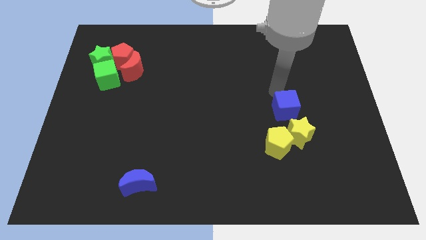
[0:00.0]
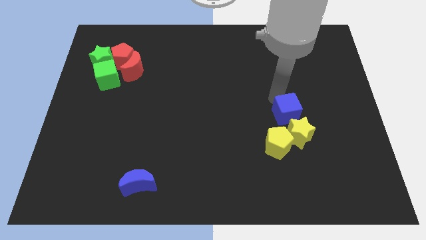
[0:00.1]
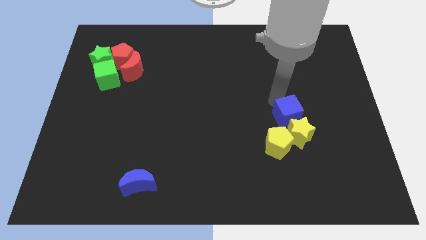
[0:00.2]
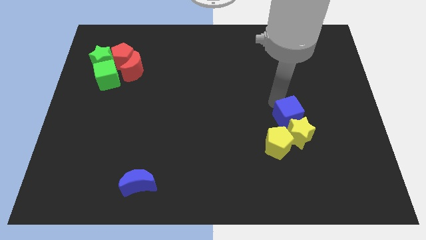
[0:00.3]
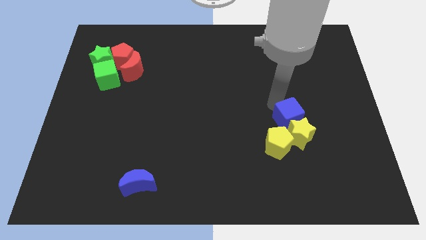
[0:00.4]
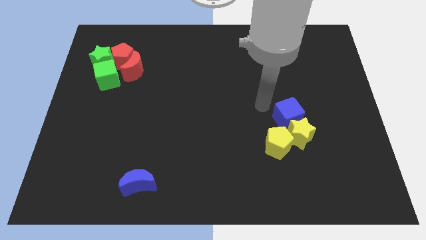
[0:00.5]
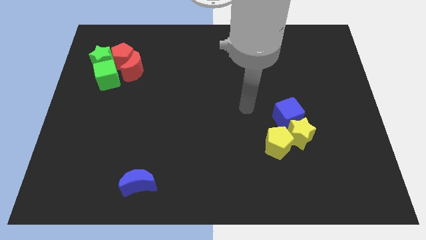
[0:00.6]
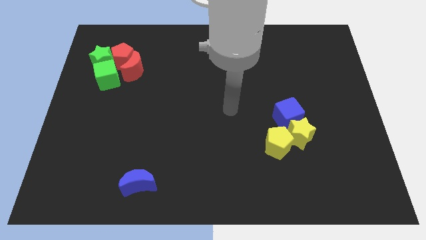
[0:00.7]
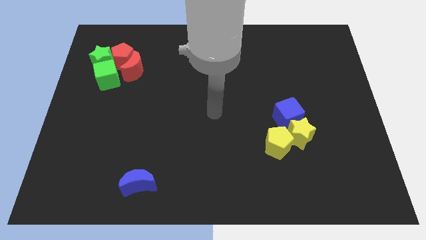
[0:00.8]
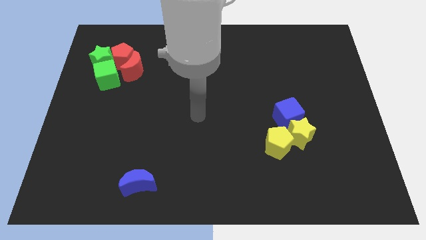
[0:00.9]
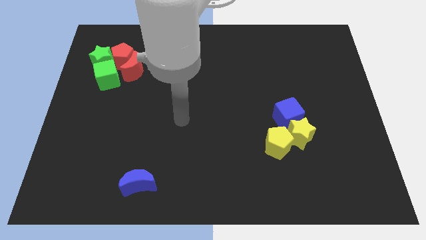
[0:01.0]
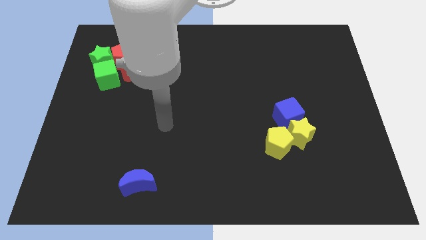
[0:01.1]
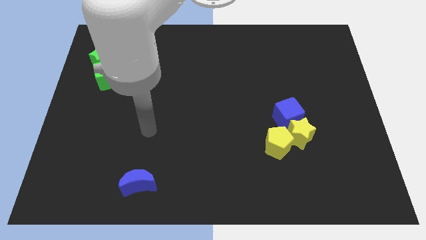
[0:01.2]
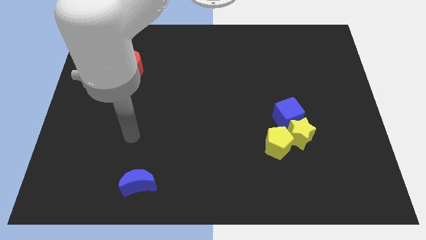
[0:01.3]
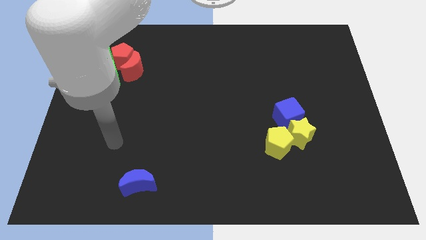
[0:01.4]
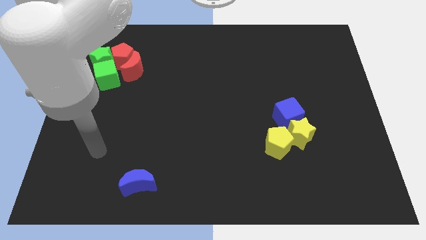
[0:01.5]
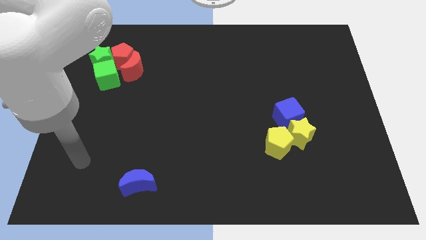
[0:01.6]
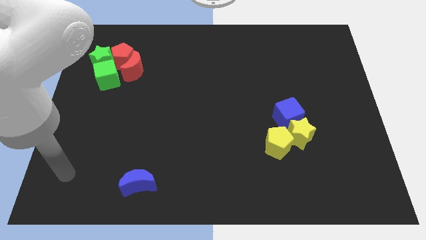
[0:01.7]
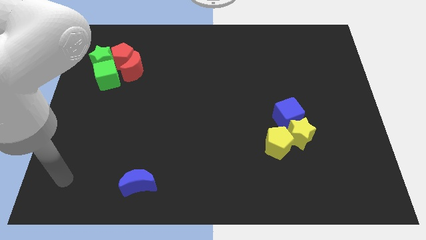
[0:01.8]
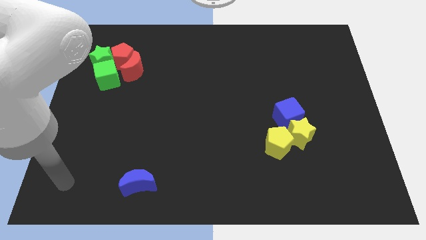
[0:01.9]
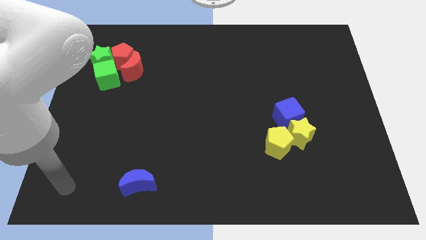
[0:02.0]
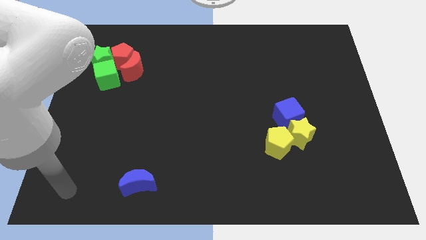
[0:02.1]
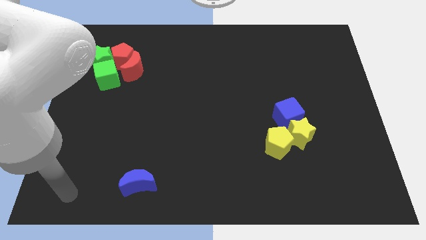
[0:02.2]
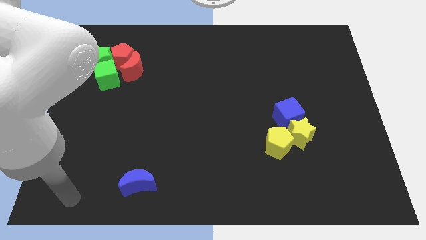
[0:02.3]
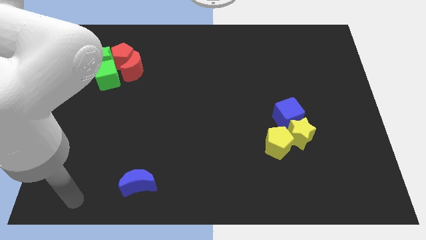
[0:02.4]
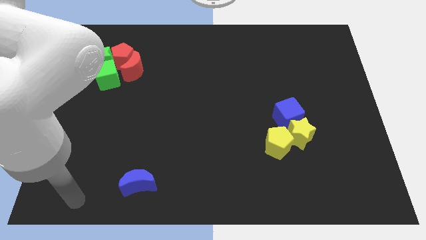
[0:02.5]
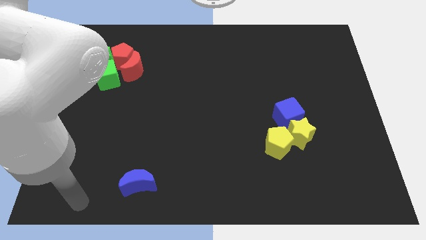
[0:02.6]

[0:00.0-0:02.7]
push the blue cube into the yellow star

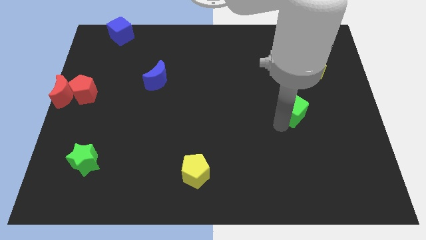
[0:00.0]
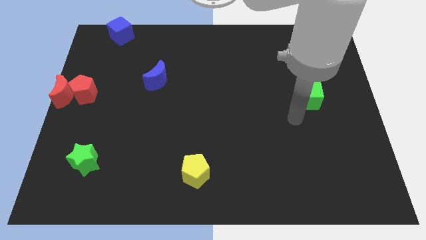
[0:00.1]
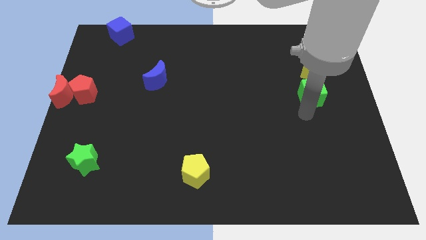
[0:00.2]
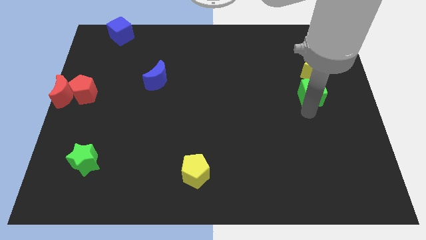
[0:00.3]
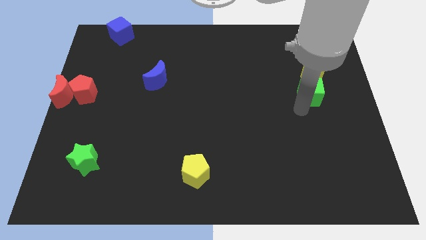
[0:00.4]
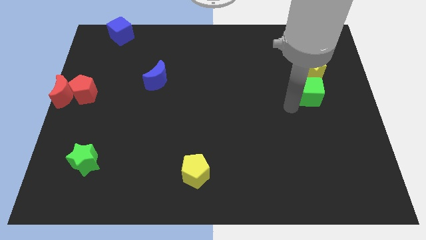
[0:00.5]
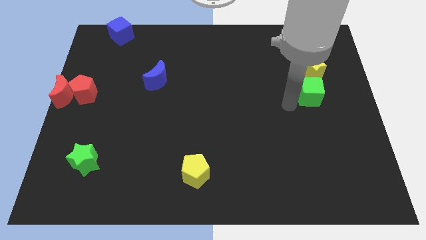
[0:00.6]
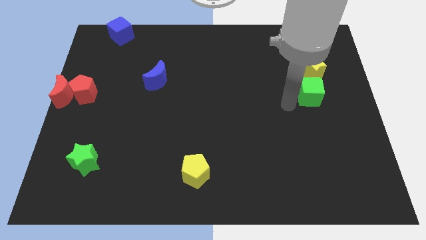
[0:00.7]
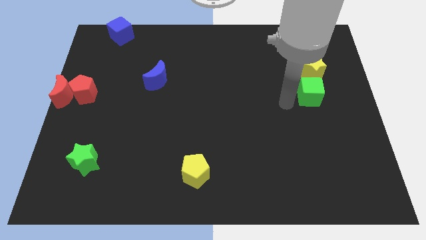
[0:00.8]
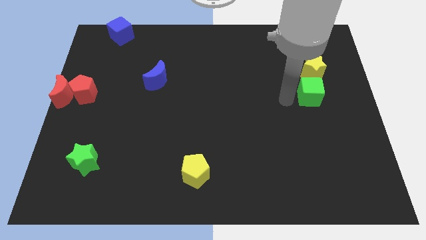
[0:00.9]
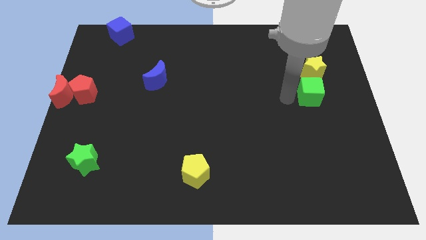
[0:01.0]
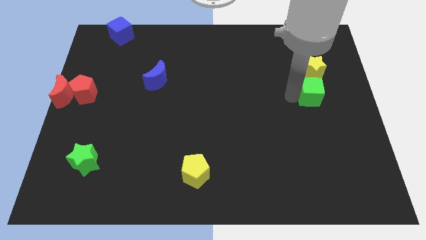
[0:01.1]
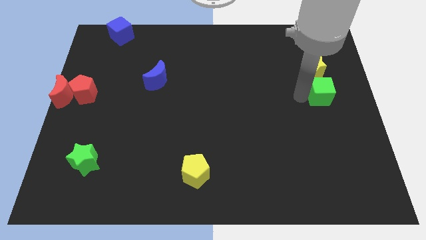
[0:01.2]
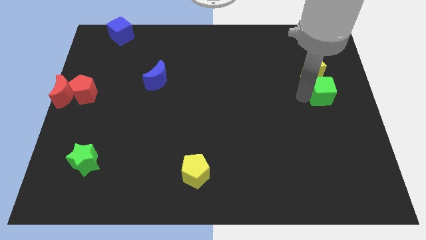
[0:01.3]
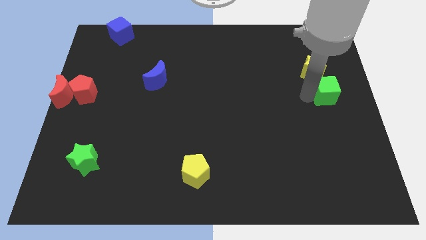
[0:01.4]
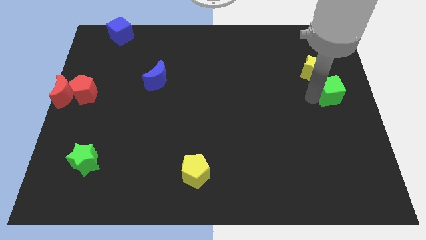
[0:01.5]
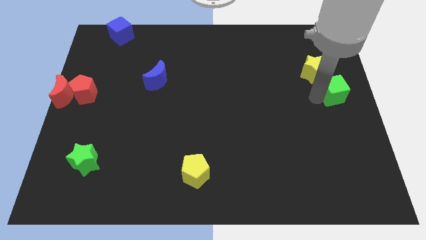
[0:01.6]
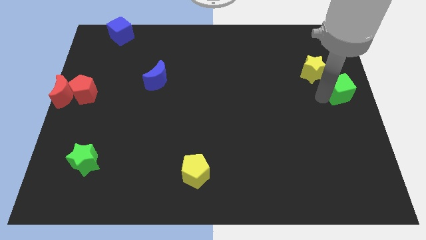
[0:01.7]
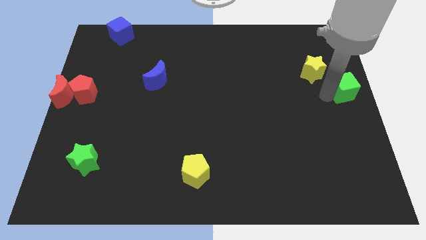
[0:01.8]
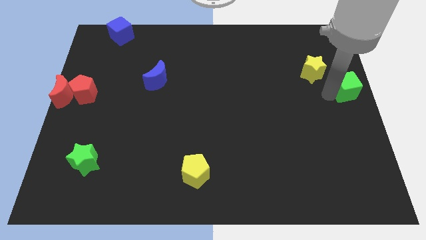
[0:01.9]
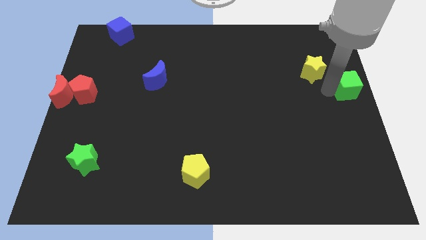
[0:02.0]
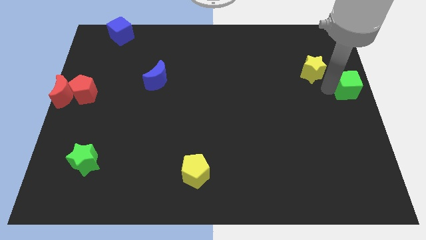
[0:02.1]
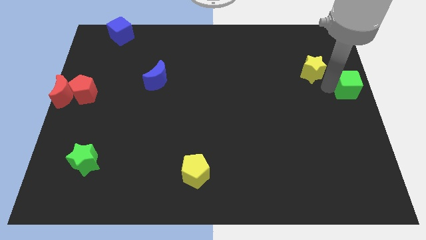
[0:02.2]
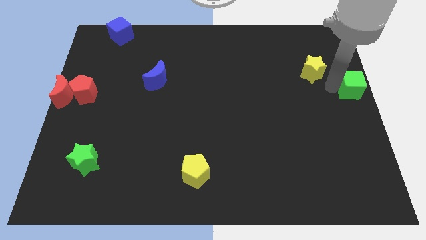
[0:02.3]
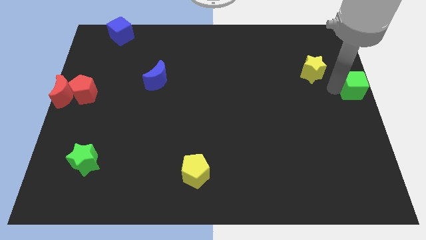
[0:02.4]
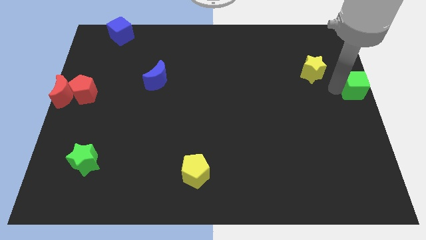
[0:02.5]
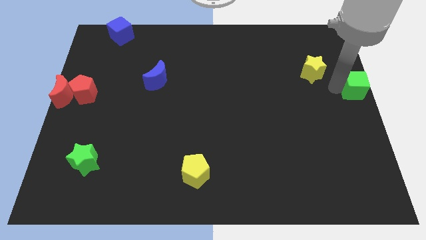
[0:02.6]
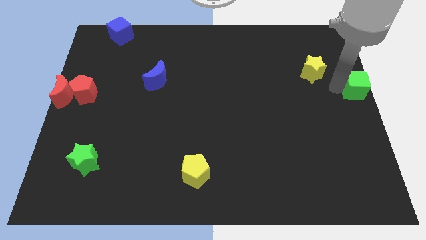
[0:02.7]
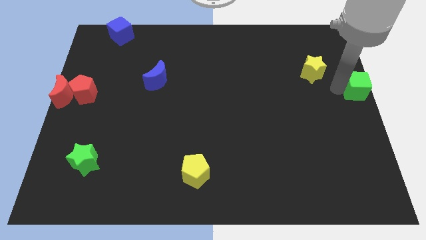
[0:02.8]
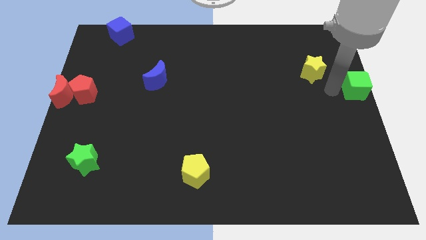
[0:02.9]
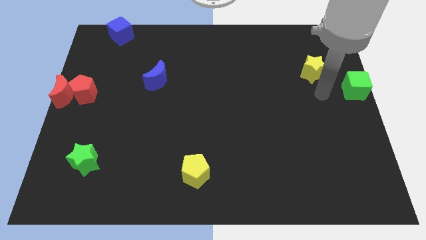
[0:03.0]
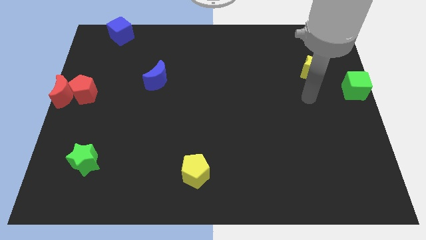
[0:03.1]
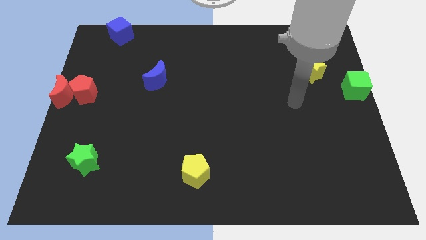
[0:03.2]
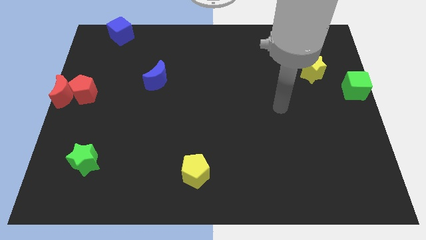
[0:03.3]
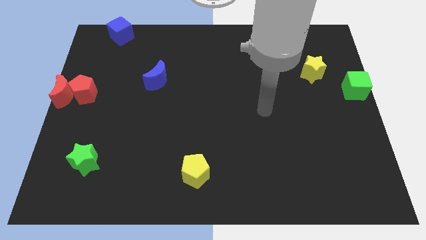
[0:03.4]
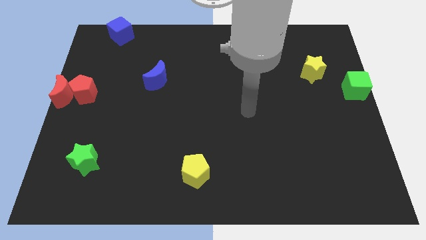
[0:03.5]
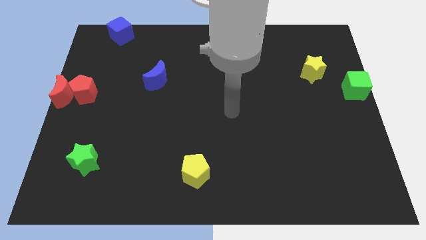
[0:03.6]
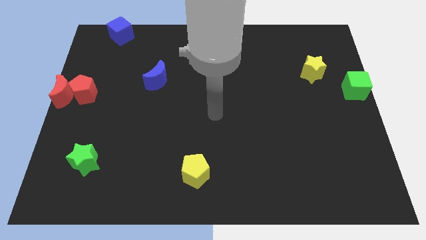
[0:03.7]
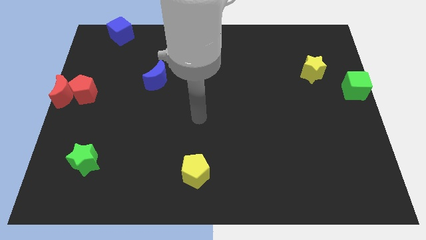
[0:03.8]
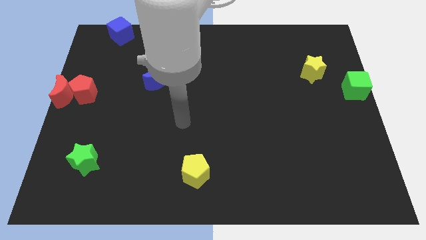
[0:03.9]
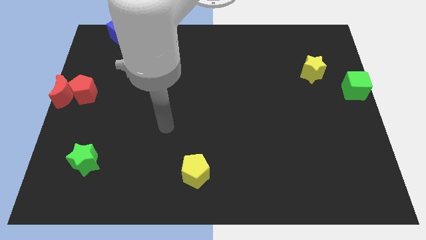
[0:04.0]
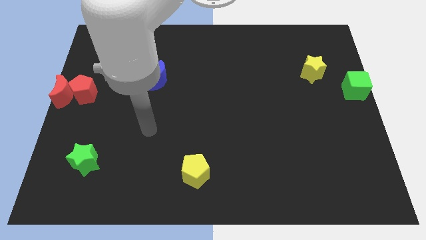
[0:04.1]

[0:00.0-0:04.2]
drag the green cube to the right corner

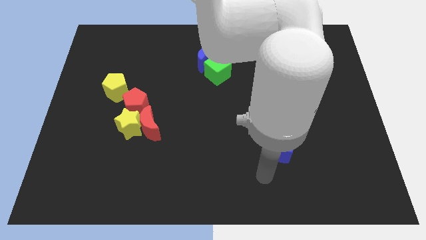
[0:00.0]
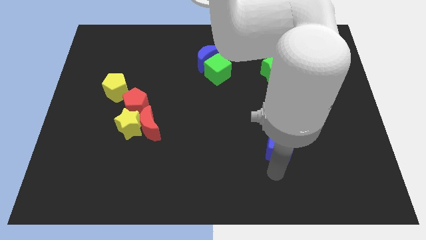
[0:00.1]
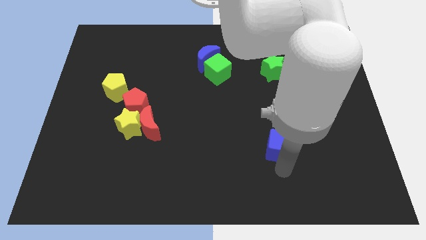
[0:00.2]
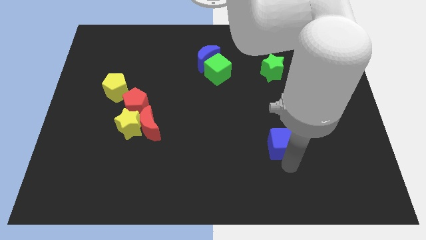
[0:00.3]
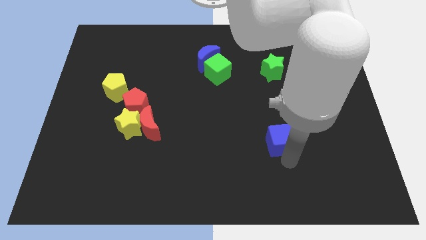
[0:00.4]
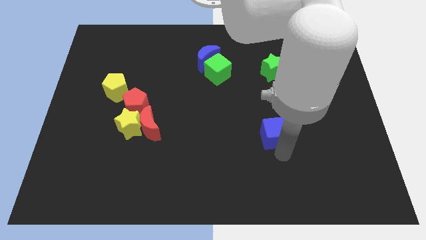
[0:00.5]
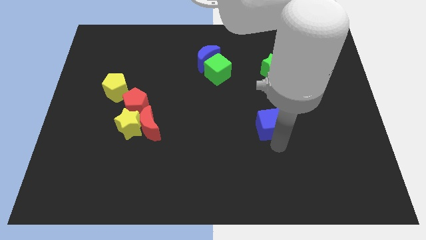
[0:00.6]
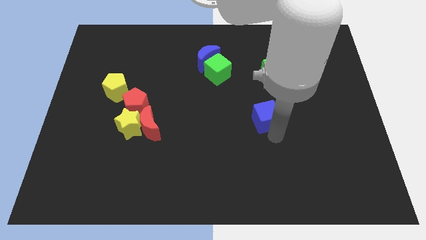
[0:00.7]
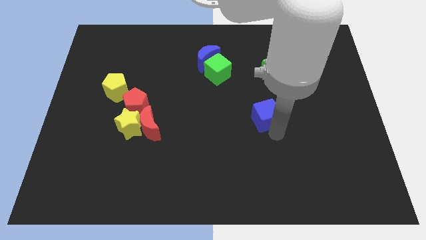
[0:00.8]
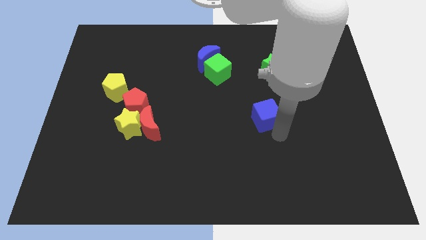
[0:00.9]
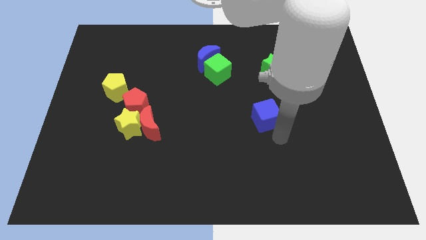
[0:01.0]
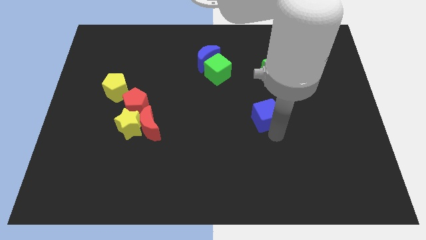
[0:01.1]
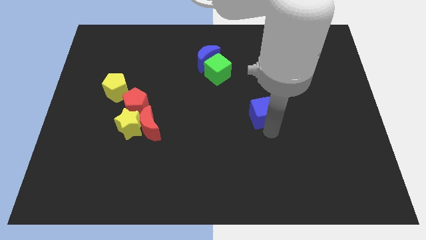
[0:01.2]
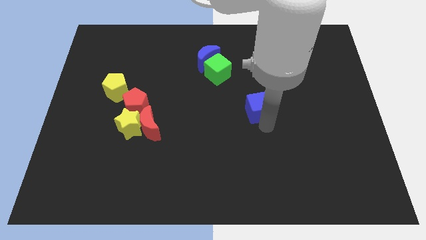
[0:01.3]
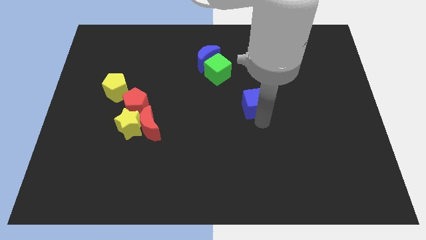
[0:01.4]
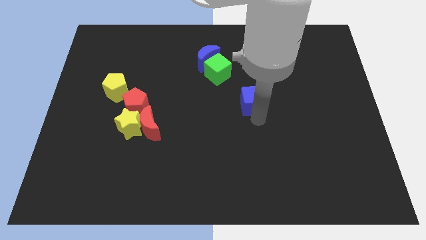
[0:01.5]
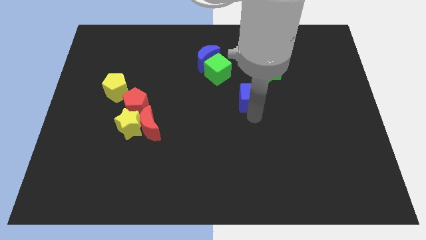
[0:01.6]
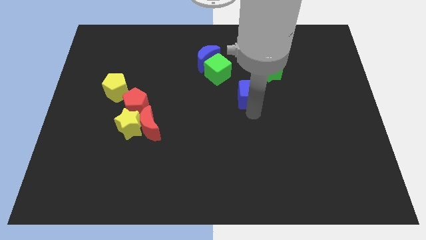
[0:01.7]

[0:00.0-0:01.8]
push the blue cube towards up

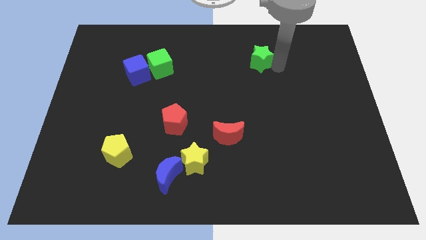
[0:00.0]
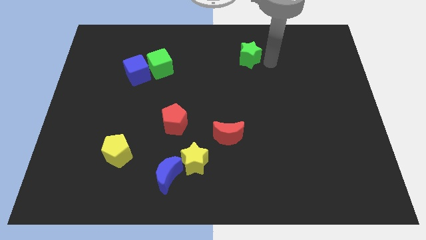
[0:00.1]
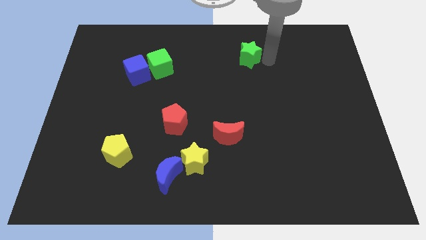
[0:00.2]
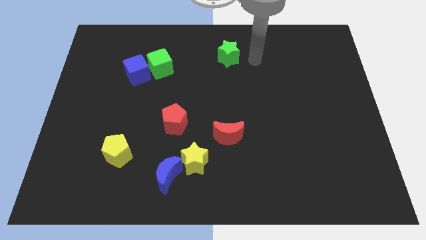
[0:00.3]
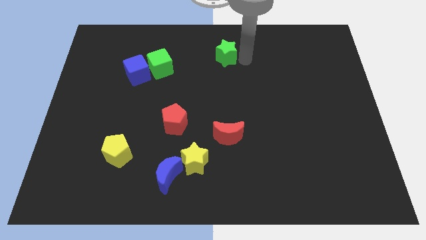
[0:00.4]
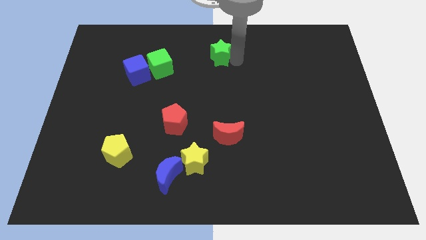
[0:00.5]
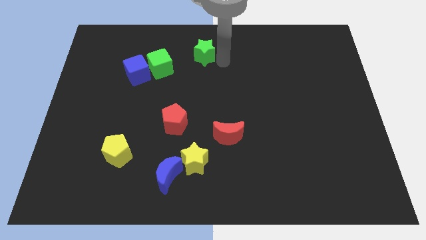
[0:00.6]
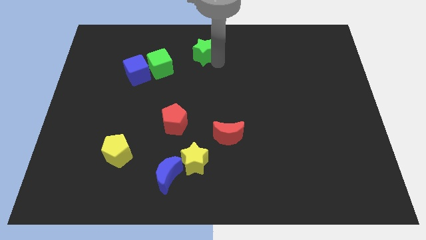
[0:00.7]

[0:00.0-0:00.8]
slightly move the green star towards the left
